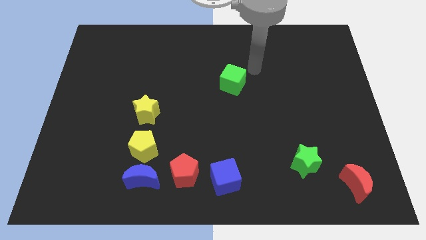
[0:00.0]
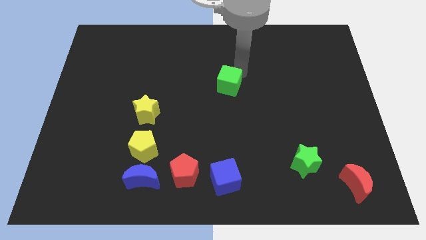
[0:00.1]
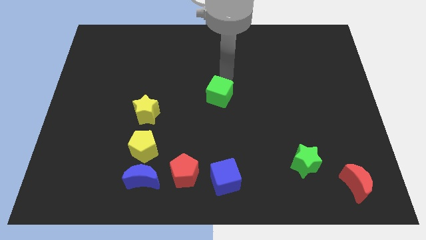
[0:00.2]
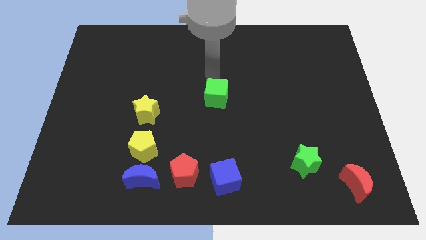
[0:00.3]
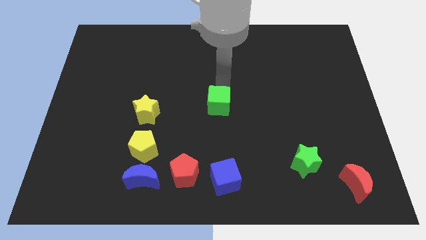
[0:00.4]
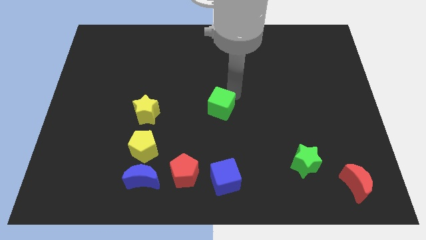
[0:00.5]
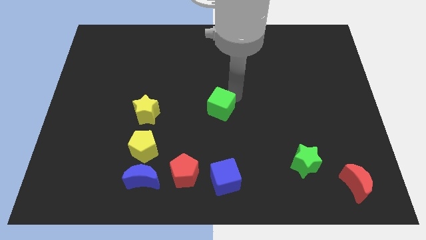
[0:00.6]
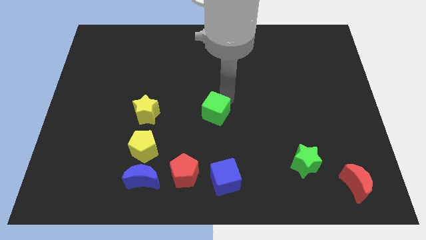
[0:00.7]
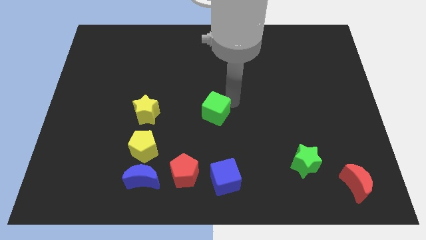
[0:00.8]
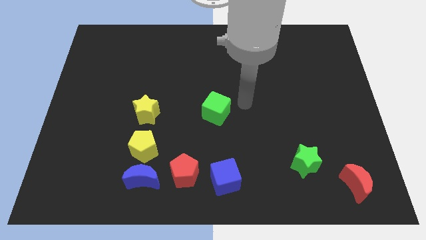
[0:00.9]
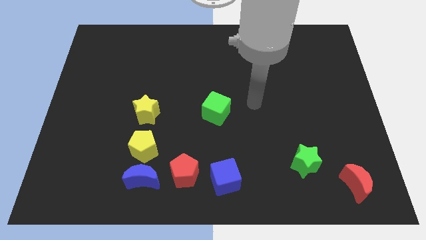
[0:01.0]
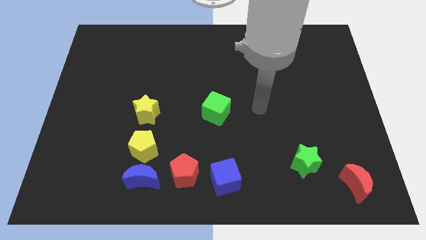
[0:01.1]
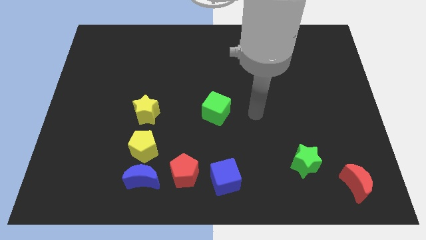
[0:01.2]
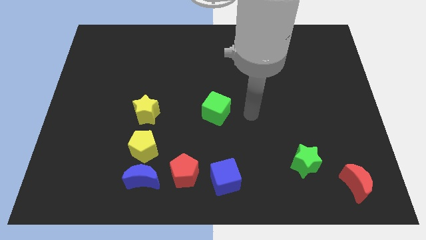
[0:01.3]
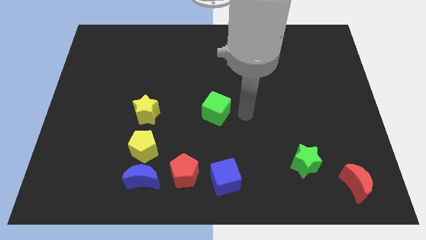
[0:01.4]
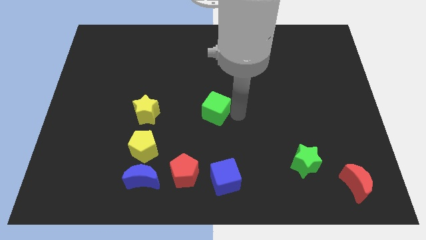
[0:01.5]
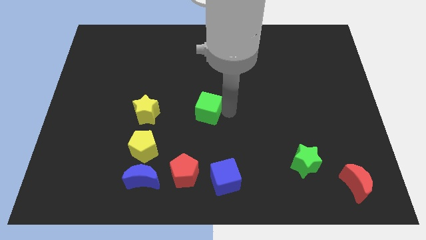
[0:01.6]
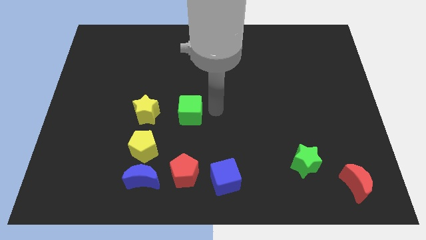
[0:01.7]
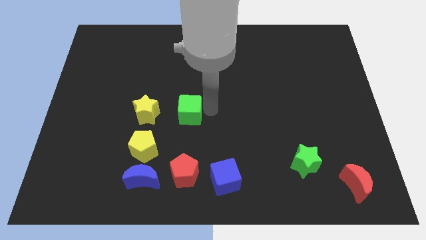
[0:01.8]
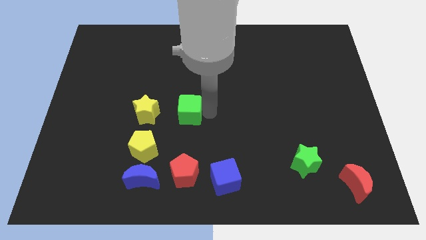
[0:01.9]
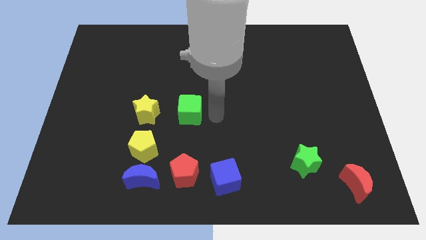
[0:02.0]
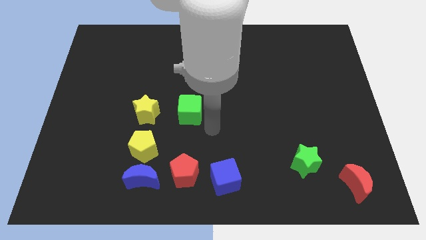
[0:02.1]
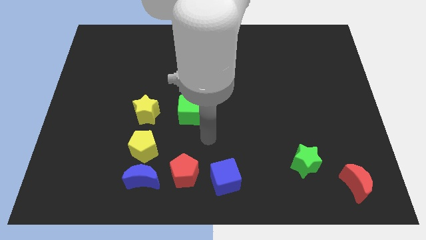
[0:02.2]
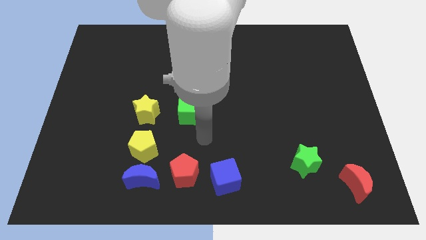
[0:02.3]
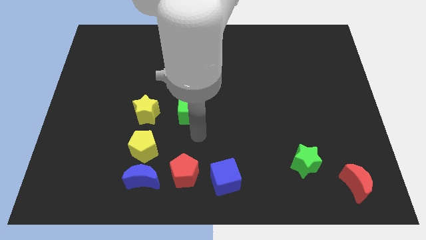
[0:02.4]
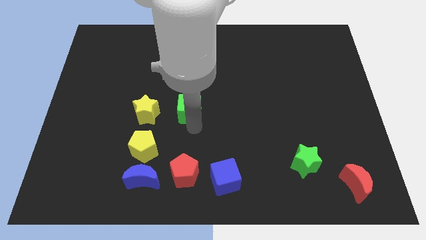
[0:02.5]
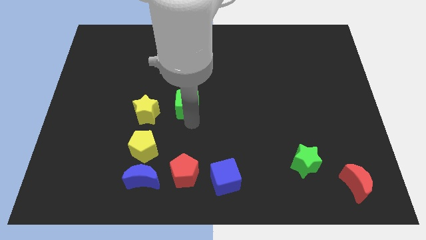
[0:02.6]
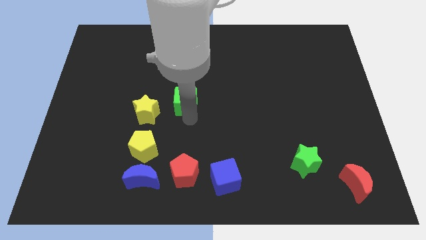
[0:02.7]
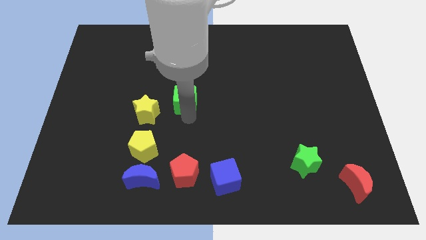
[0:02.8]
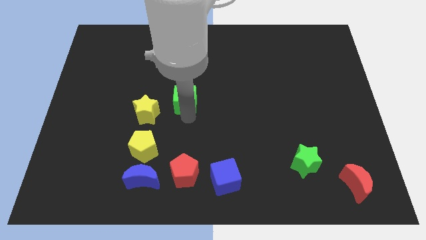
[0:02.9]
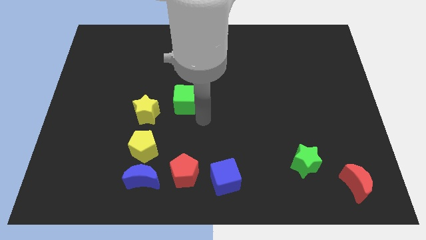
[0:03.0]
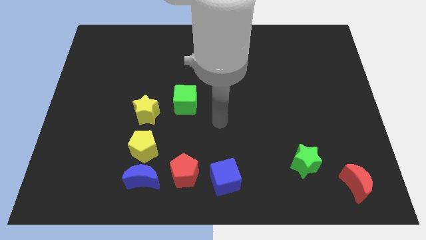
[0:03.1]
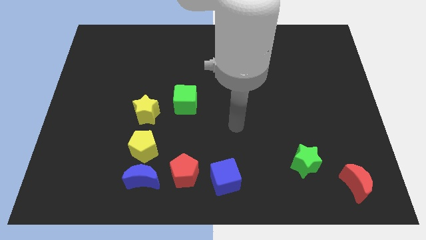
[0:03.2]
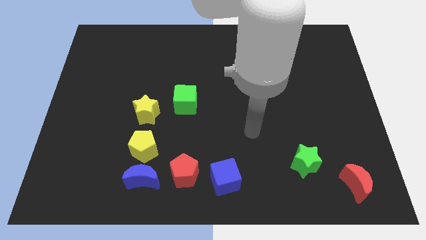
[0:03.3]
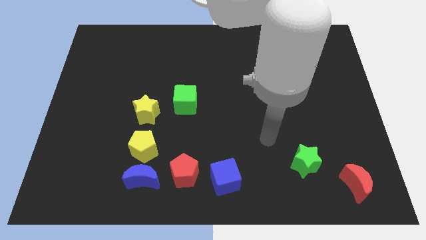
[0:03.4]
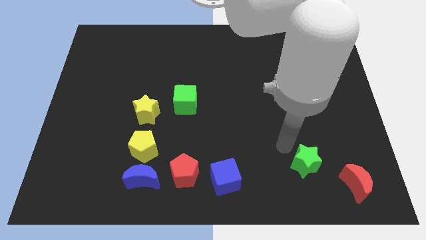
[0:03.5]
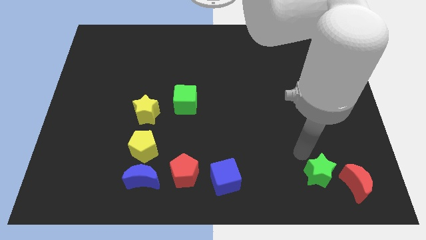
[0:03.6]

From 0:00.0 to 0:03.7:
move the green cube diagonally top left to the blue cube

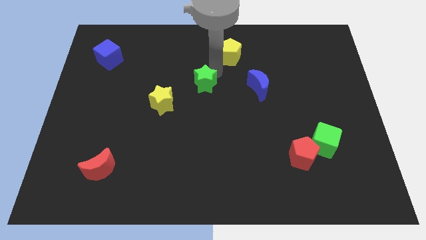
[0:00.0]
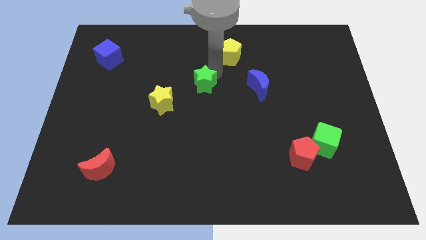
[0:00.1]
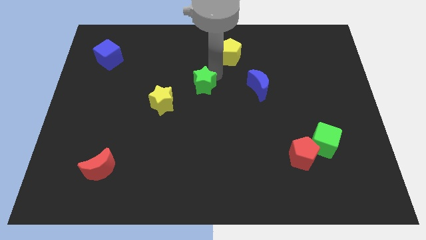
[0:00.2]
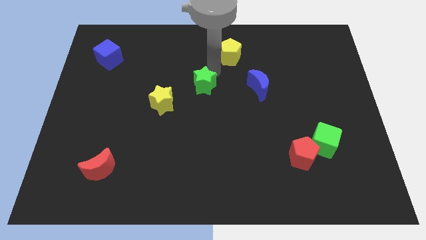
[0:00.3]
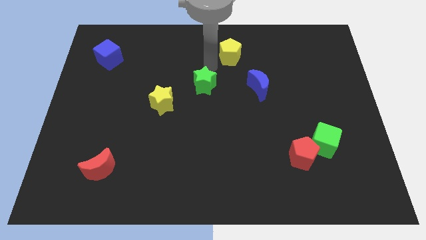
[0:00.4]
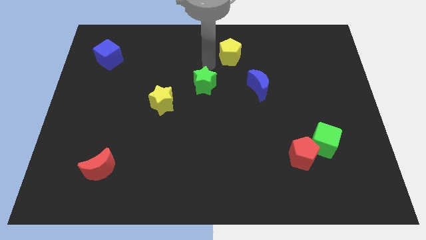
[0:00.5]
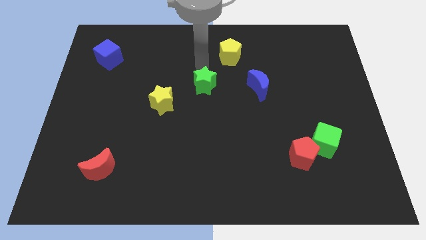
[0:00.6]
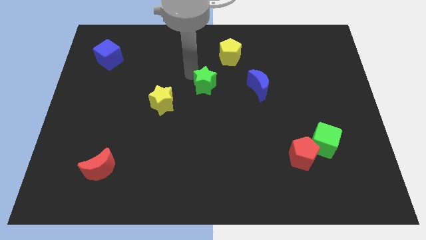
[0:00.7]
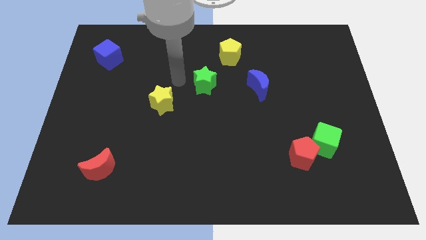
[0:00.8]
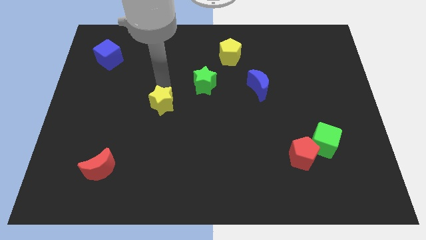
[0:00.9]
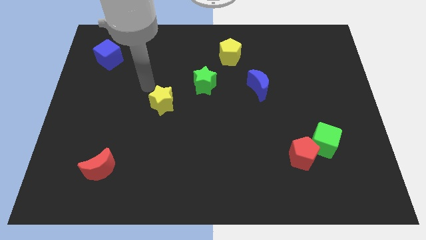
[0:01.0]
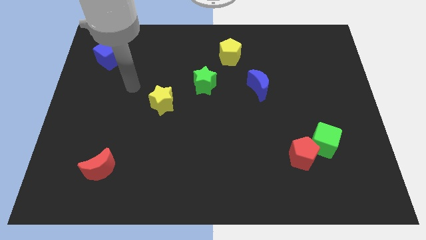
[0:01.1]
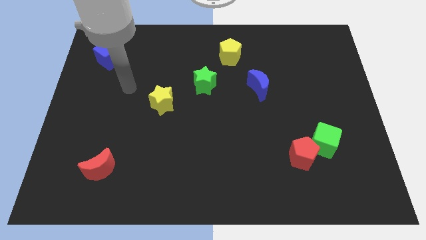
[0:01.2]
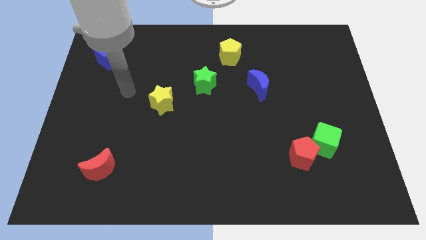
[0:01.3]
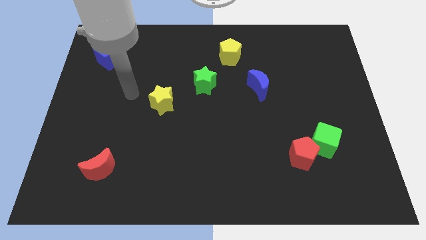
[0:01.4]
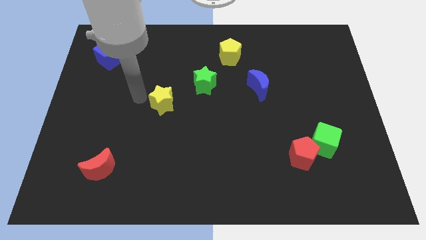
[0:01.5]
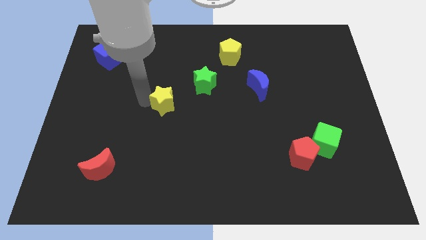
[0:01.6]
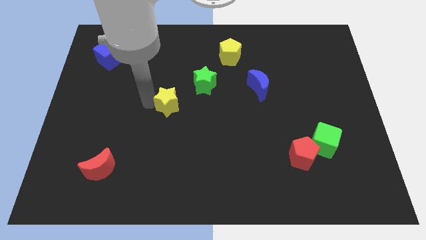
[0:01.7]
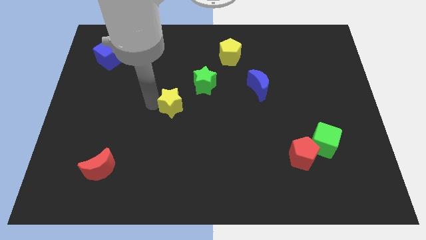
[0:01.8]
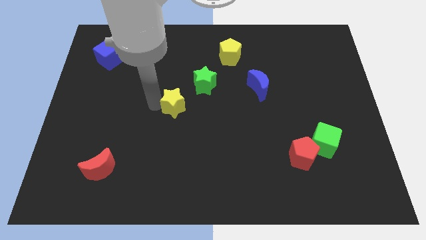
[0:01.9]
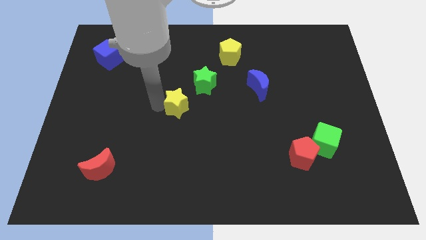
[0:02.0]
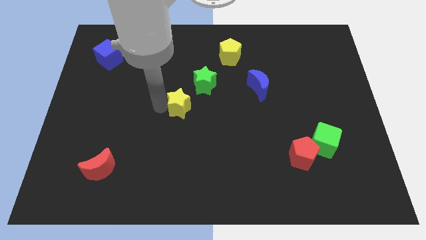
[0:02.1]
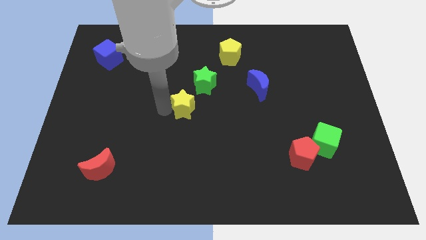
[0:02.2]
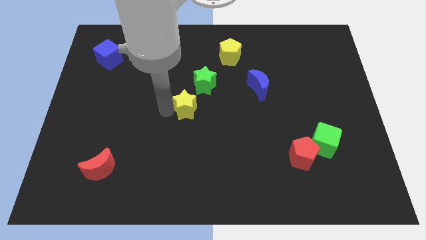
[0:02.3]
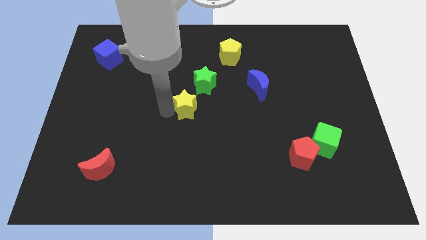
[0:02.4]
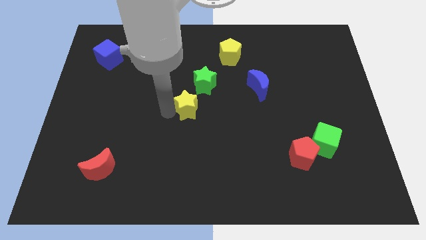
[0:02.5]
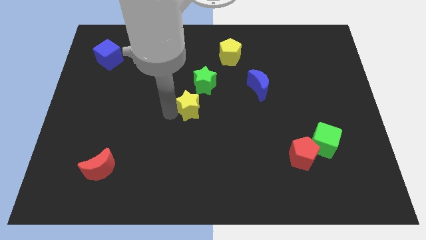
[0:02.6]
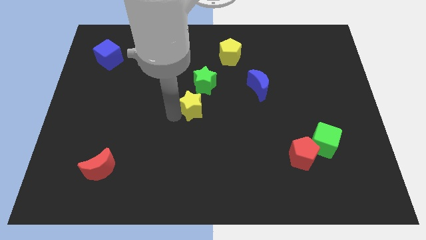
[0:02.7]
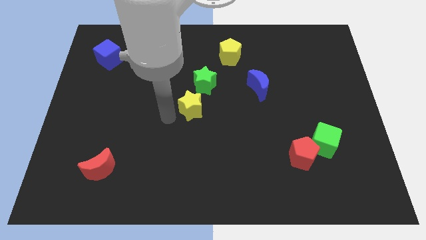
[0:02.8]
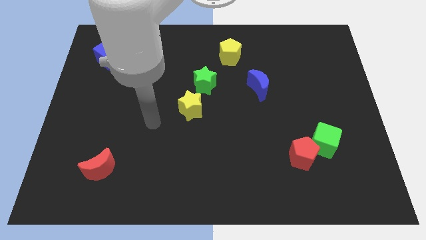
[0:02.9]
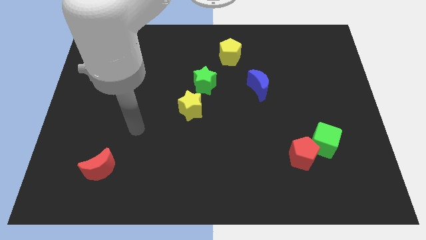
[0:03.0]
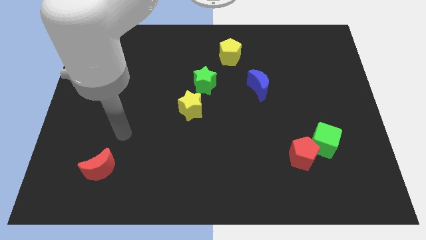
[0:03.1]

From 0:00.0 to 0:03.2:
move the yellow star near to the green star

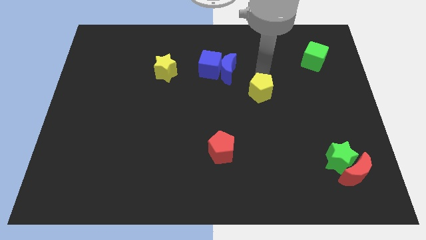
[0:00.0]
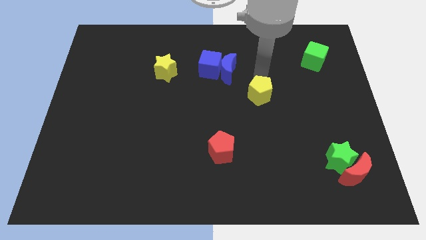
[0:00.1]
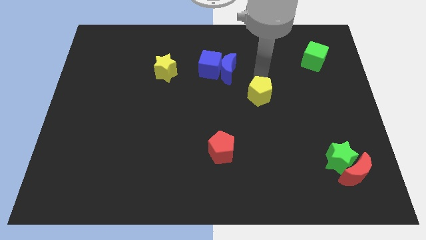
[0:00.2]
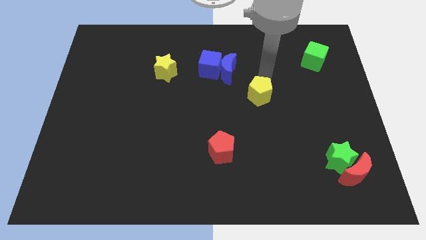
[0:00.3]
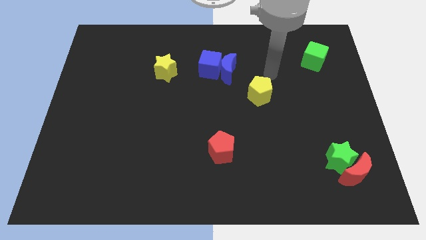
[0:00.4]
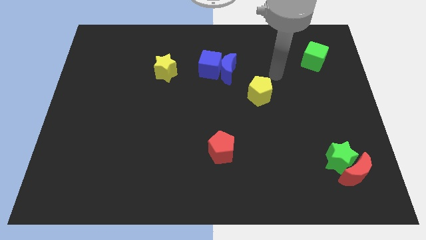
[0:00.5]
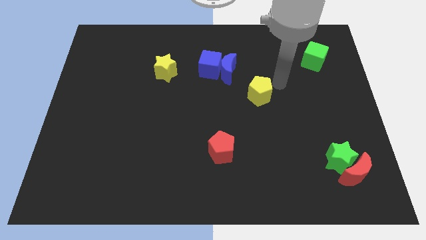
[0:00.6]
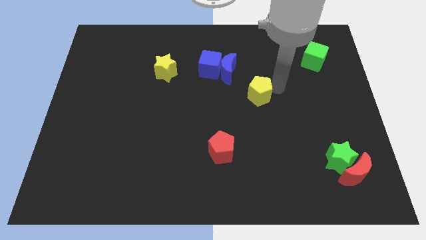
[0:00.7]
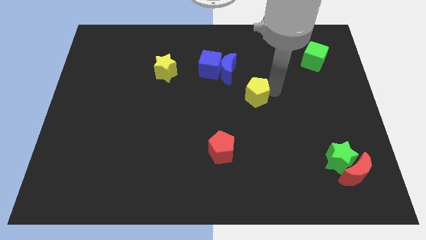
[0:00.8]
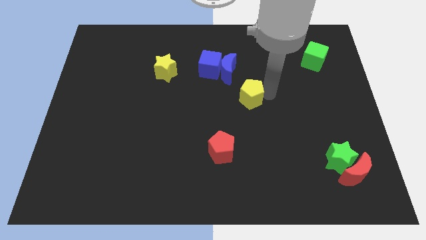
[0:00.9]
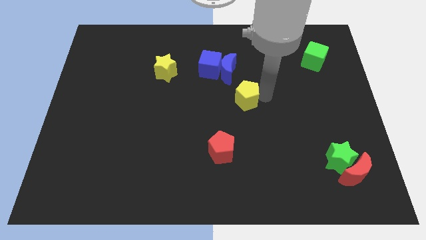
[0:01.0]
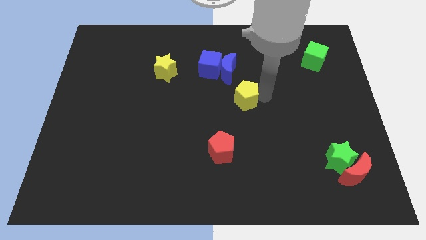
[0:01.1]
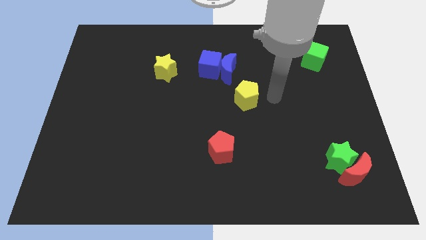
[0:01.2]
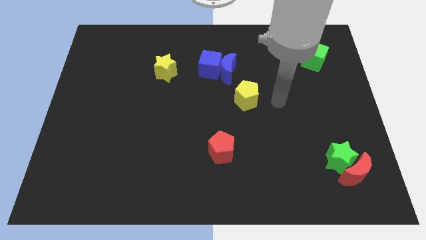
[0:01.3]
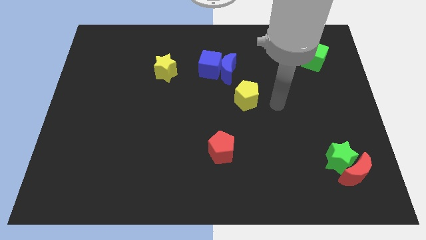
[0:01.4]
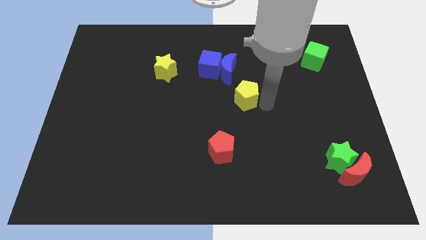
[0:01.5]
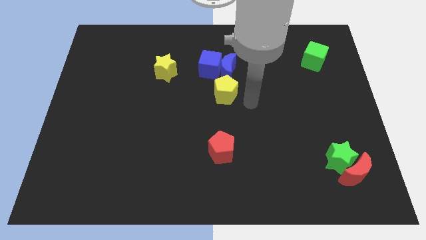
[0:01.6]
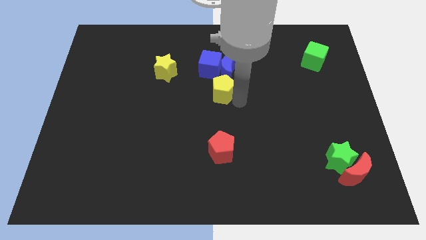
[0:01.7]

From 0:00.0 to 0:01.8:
move the yellow pentagon to the bottom of the blue crescent

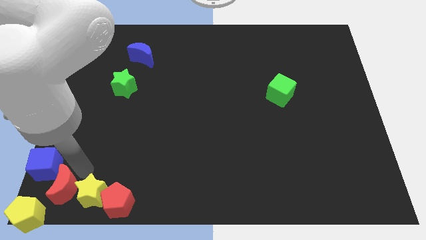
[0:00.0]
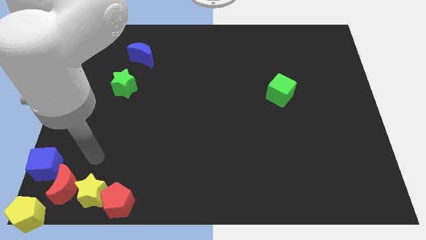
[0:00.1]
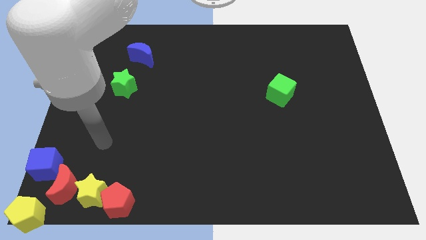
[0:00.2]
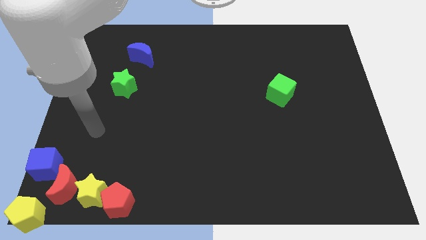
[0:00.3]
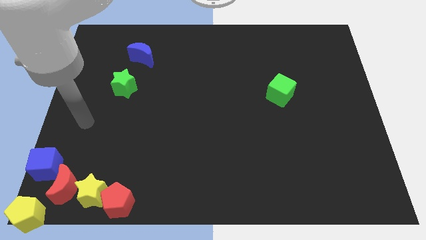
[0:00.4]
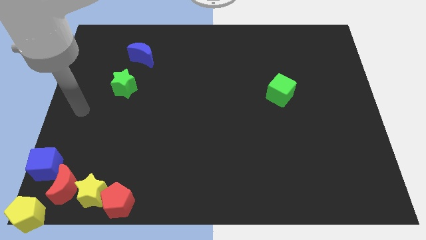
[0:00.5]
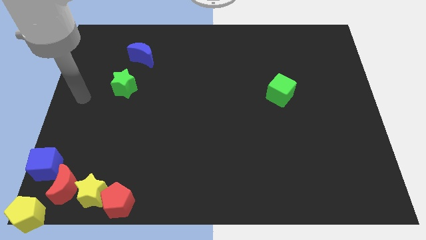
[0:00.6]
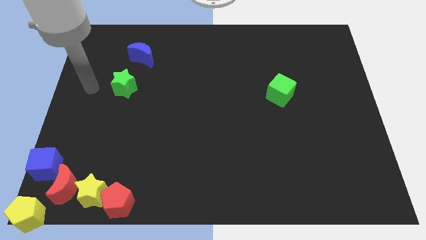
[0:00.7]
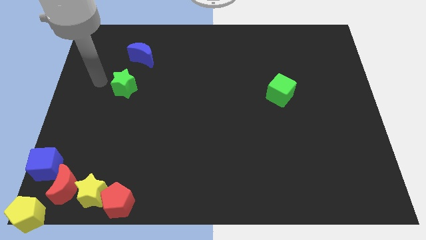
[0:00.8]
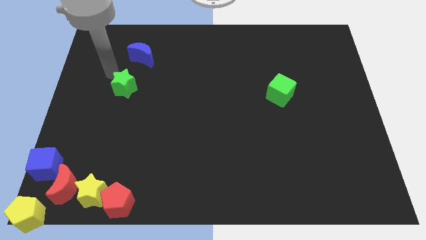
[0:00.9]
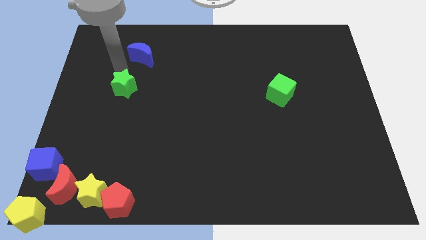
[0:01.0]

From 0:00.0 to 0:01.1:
point your arm at the top of green star
